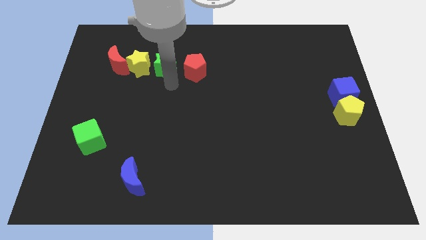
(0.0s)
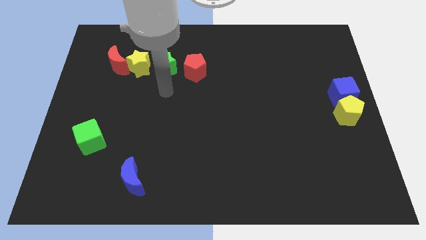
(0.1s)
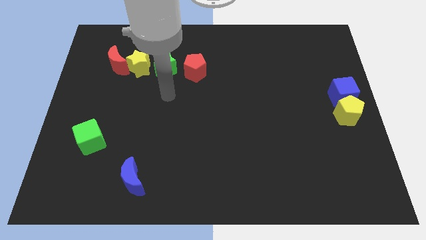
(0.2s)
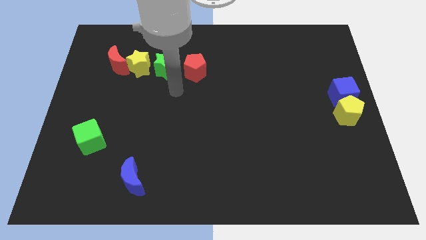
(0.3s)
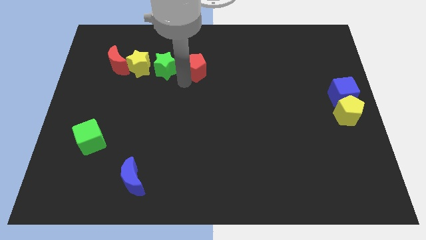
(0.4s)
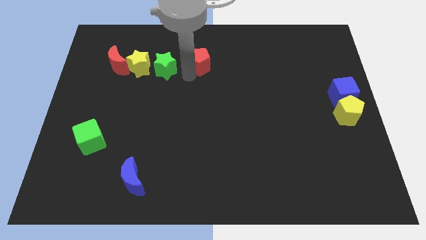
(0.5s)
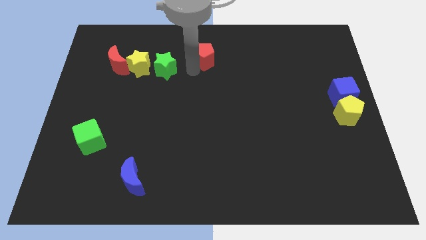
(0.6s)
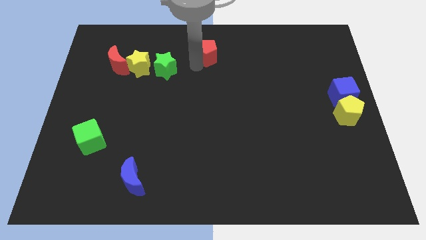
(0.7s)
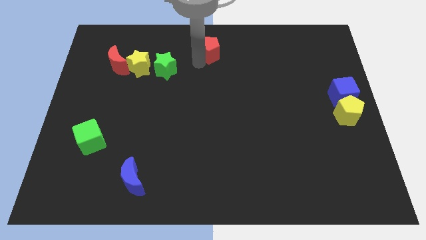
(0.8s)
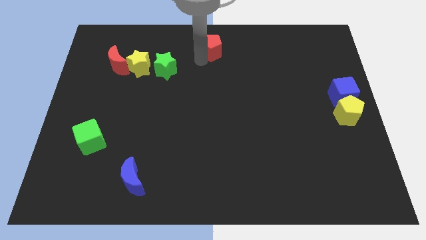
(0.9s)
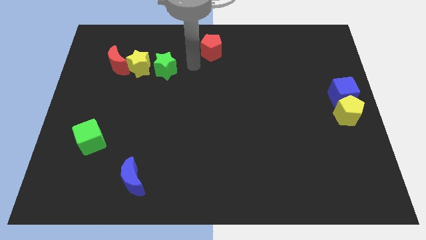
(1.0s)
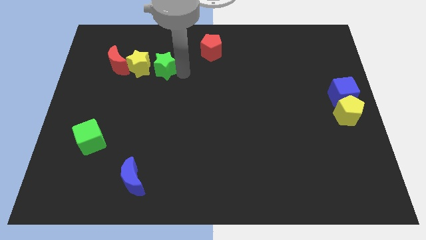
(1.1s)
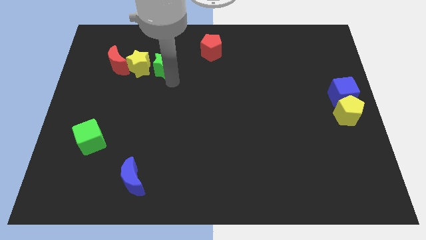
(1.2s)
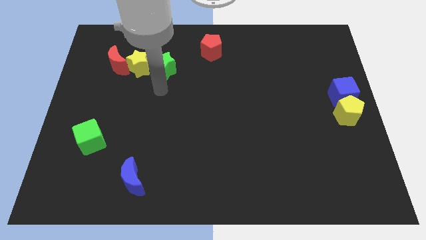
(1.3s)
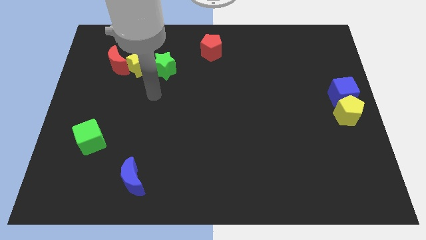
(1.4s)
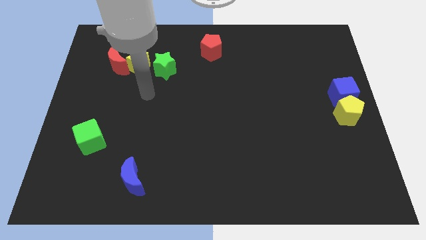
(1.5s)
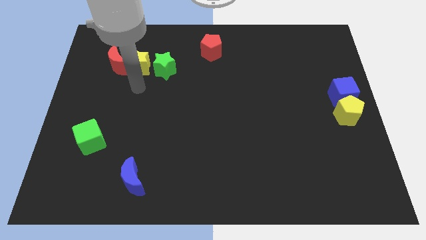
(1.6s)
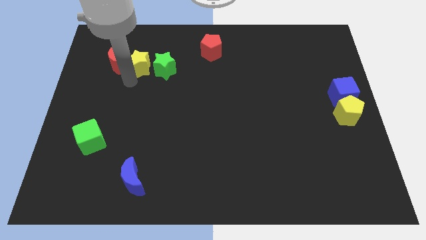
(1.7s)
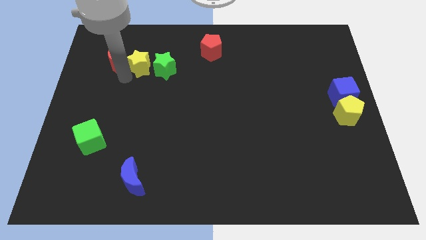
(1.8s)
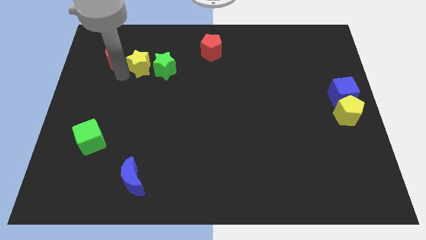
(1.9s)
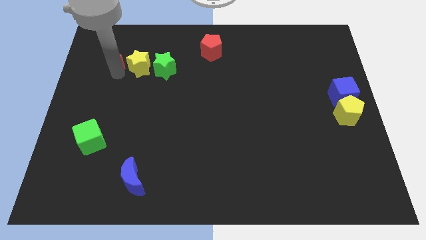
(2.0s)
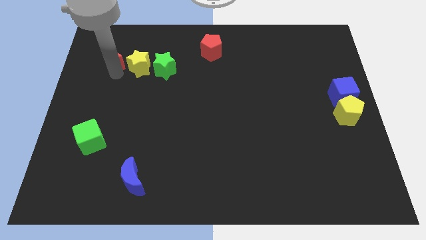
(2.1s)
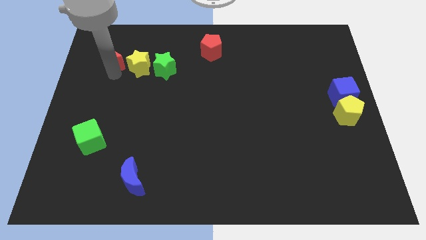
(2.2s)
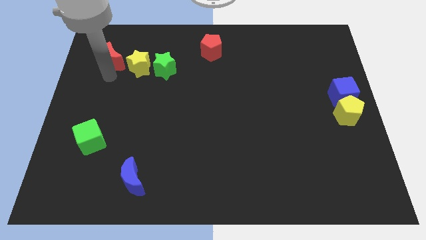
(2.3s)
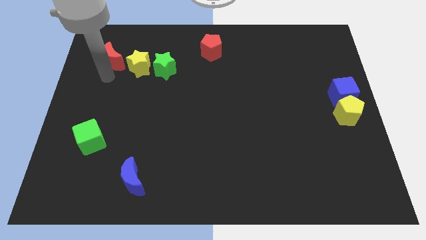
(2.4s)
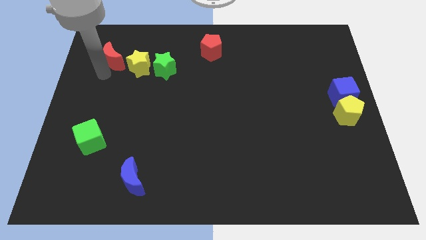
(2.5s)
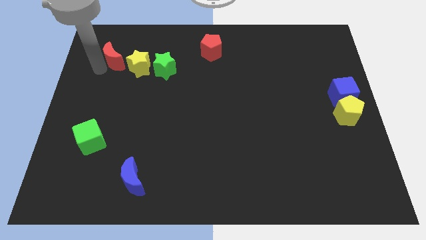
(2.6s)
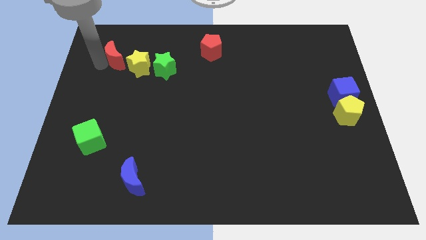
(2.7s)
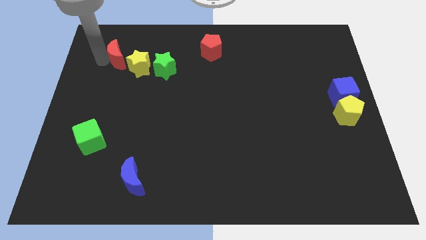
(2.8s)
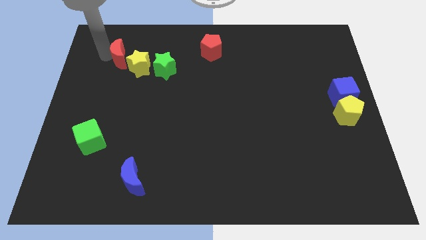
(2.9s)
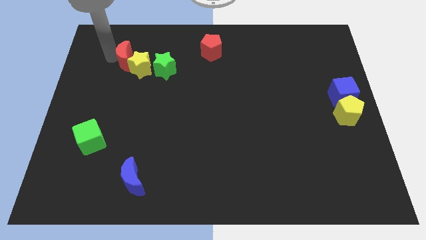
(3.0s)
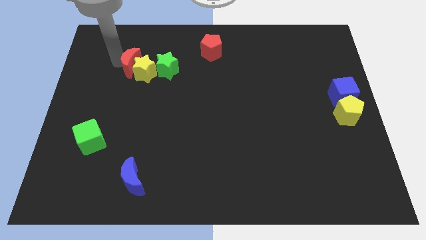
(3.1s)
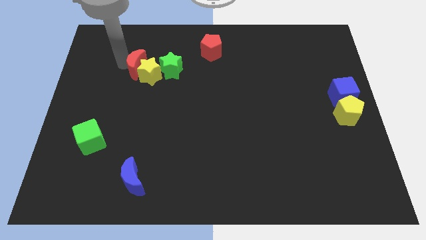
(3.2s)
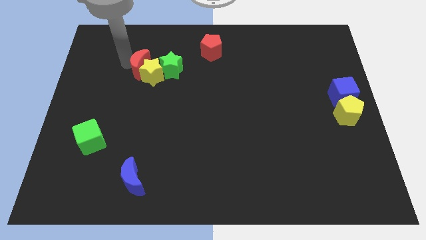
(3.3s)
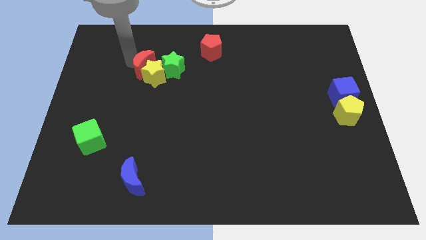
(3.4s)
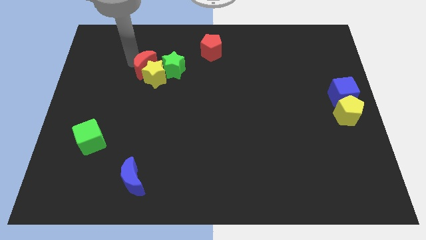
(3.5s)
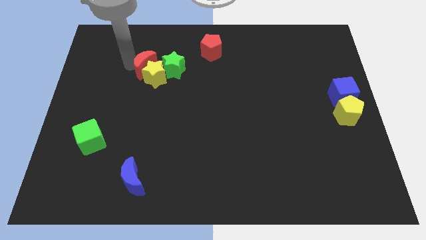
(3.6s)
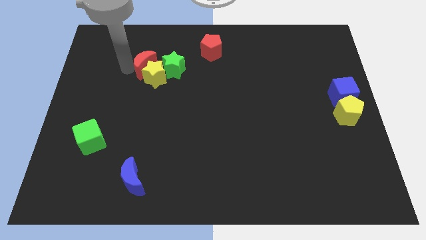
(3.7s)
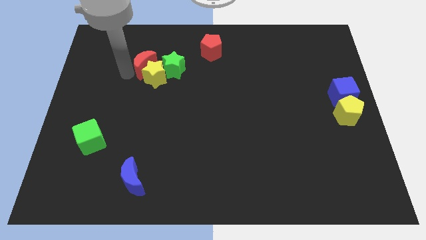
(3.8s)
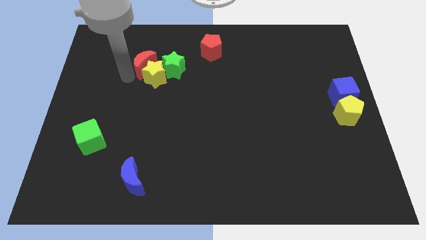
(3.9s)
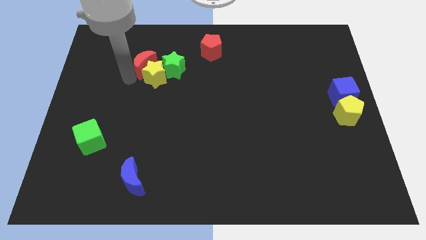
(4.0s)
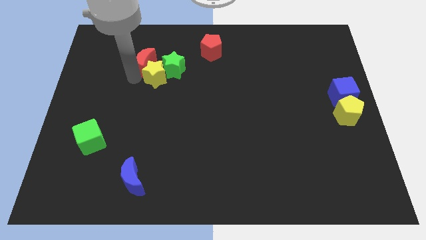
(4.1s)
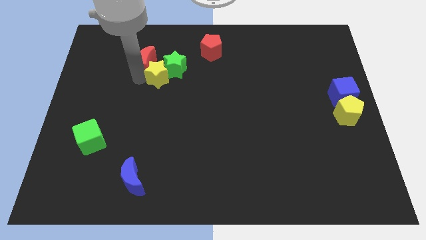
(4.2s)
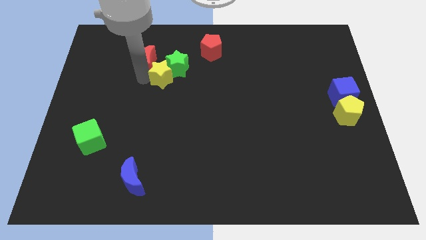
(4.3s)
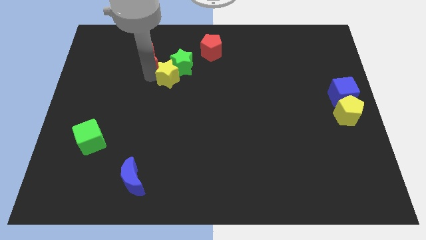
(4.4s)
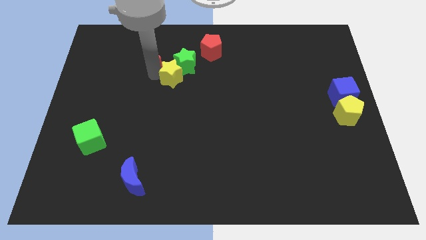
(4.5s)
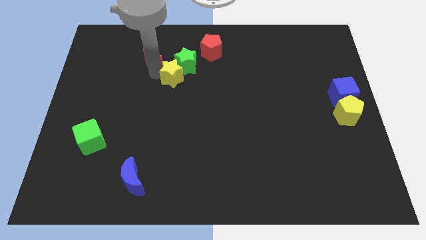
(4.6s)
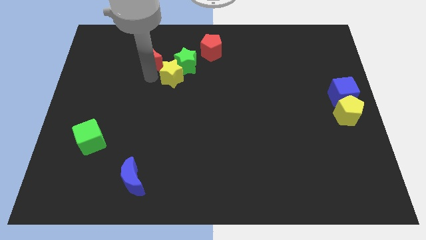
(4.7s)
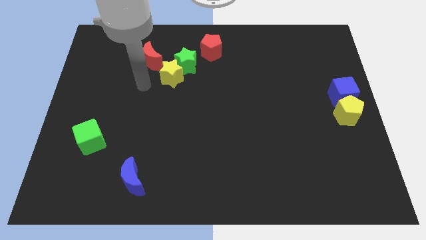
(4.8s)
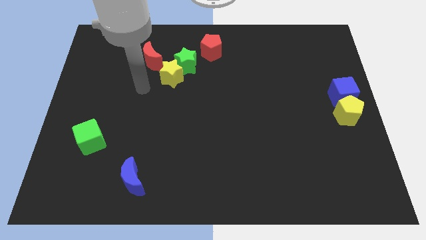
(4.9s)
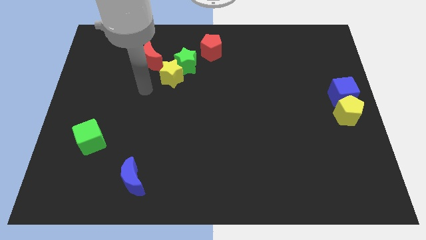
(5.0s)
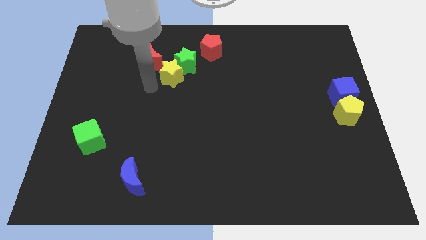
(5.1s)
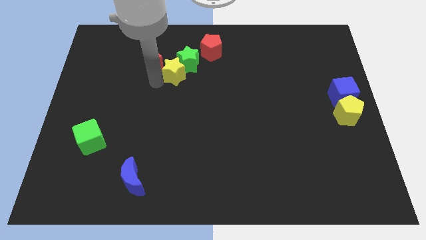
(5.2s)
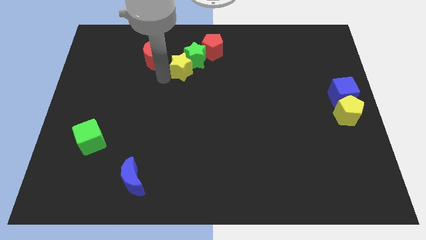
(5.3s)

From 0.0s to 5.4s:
move the group of blocks to the top side of the table

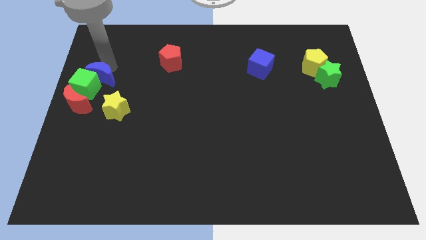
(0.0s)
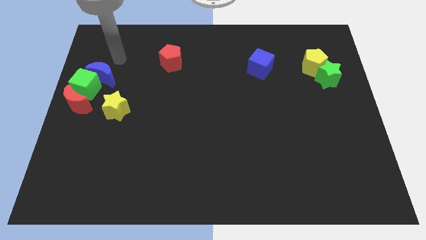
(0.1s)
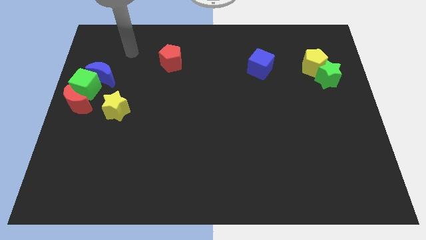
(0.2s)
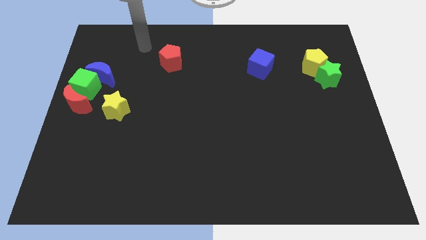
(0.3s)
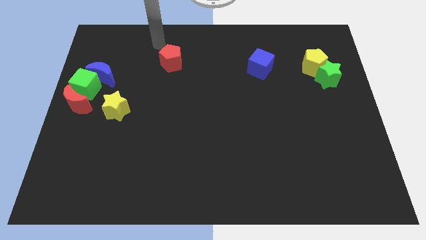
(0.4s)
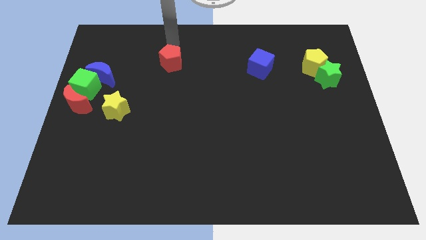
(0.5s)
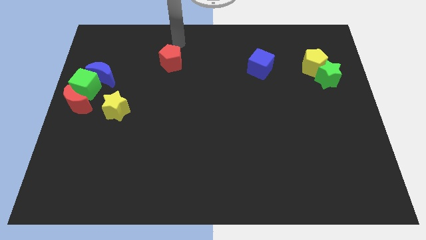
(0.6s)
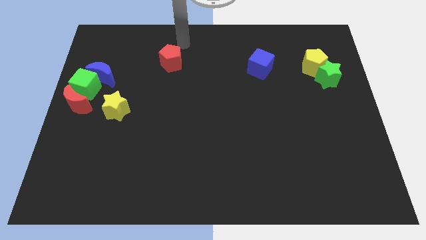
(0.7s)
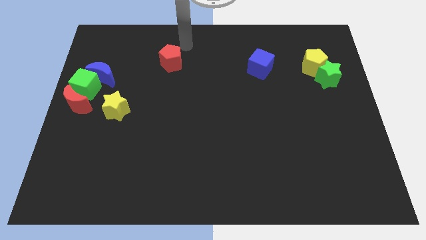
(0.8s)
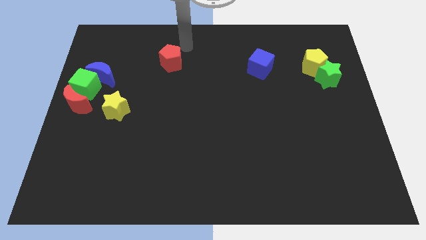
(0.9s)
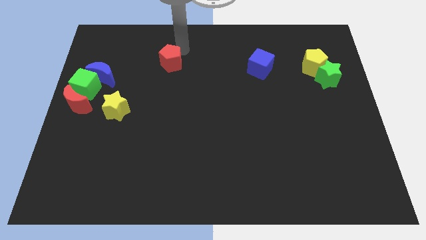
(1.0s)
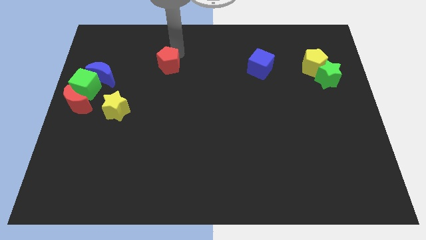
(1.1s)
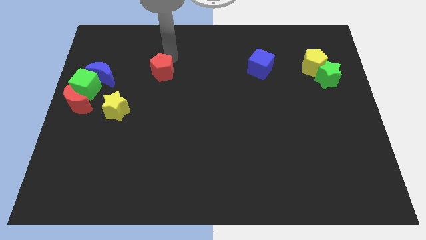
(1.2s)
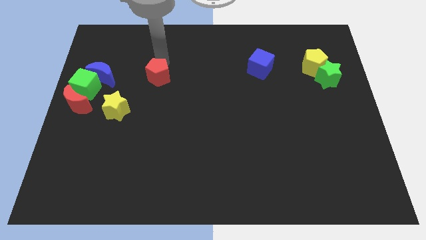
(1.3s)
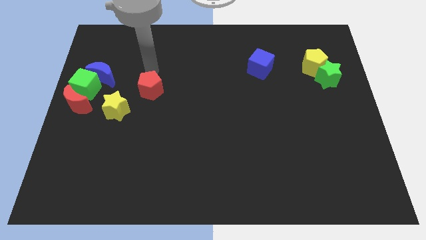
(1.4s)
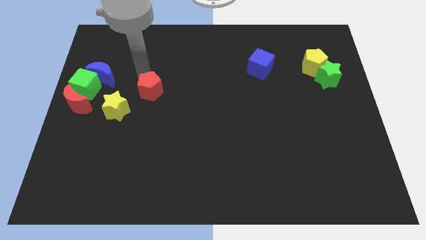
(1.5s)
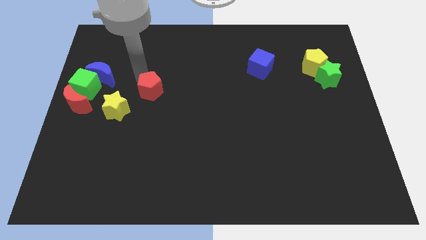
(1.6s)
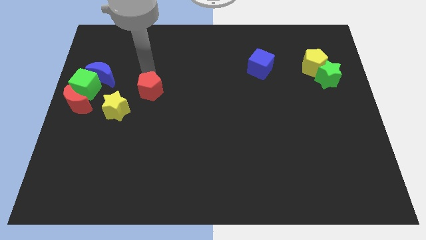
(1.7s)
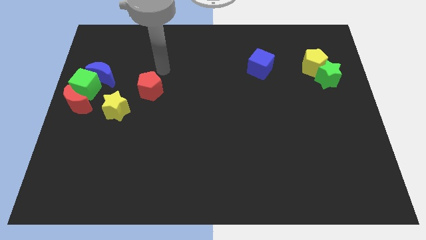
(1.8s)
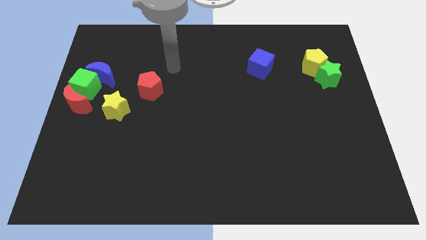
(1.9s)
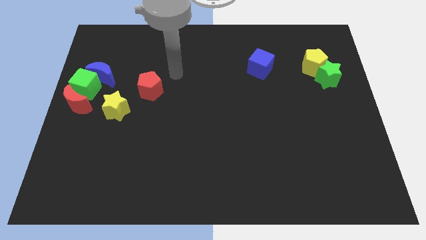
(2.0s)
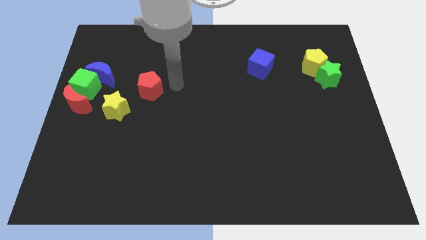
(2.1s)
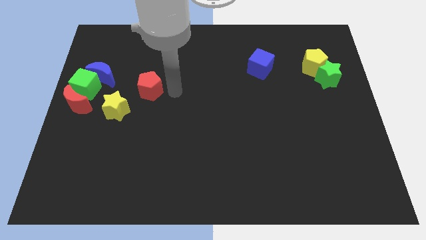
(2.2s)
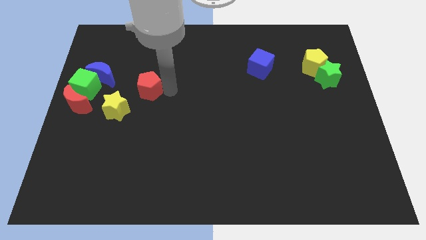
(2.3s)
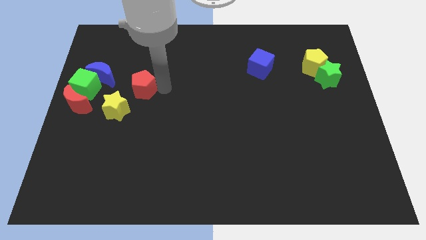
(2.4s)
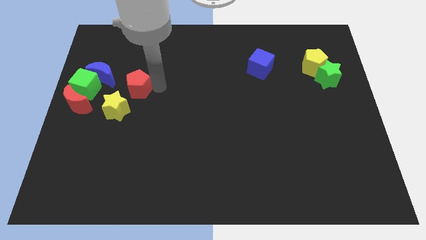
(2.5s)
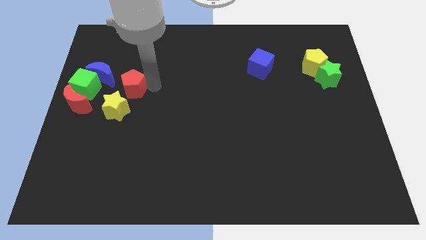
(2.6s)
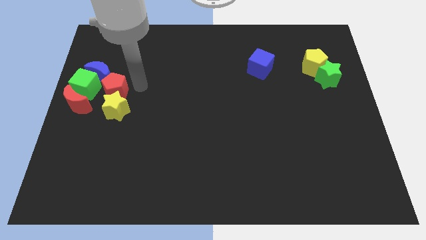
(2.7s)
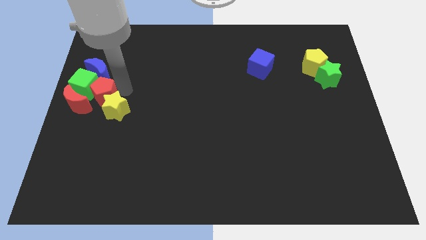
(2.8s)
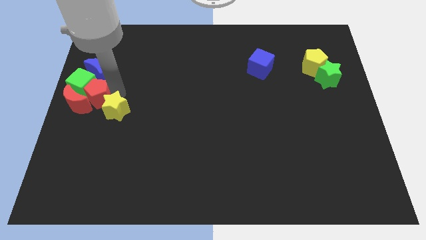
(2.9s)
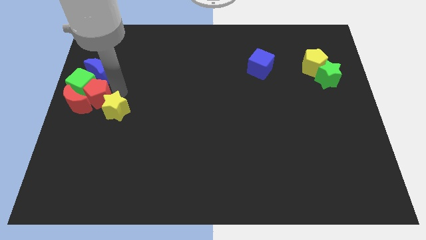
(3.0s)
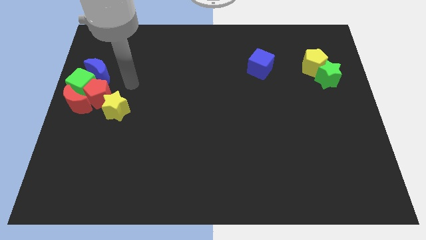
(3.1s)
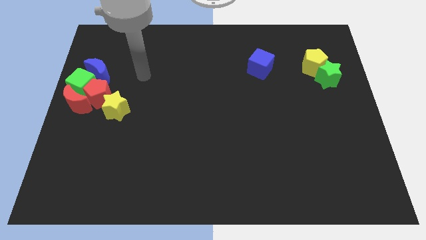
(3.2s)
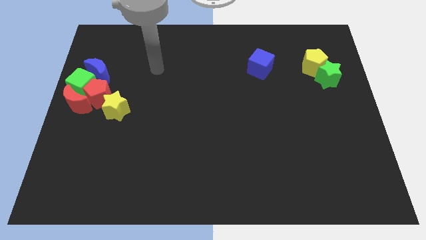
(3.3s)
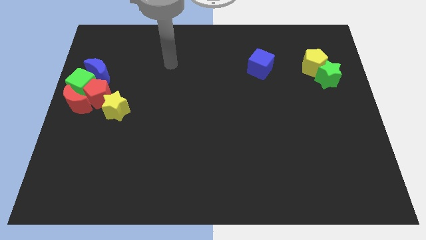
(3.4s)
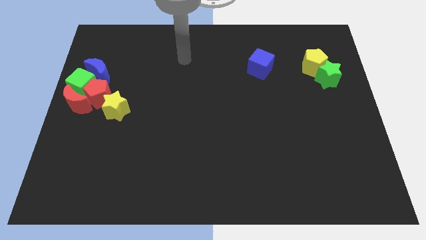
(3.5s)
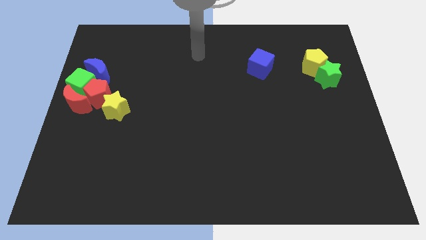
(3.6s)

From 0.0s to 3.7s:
push the red pentagon towards the group of blocks
